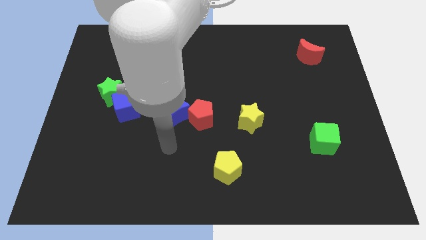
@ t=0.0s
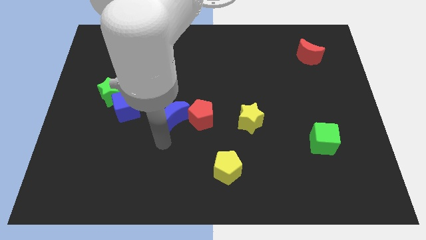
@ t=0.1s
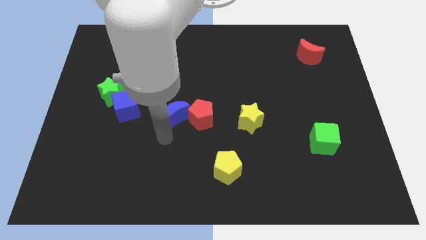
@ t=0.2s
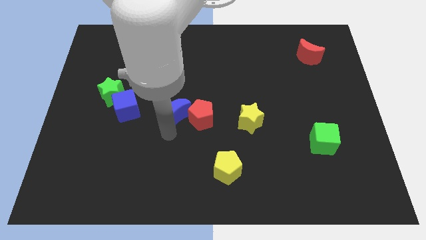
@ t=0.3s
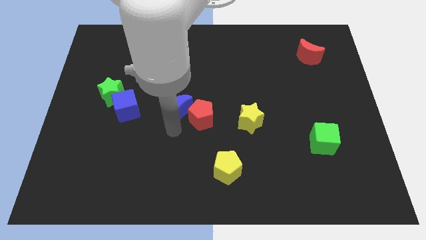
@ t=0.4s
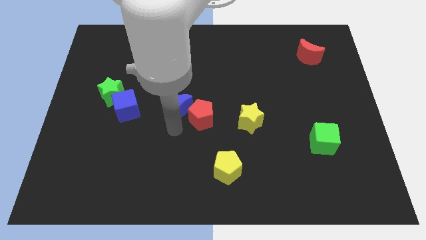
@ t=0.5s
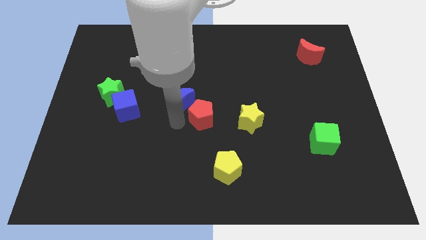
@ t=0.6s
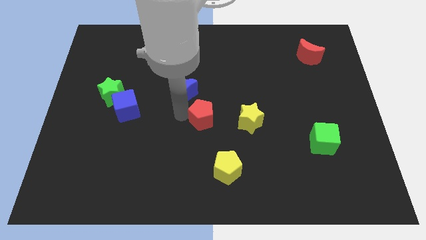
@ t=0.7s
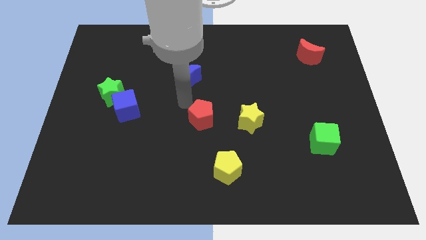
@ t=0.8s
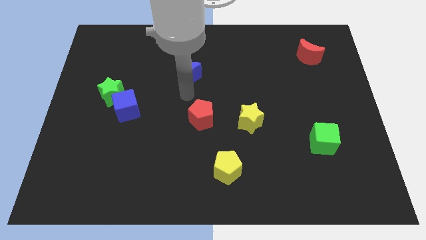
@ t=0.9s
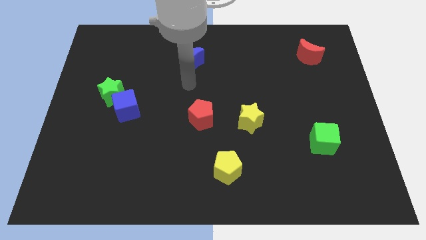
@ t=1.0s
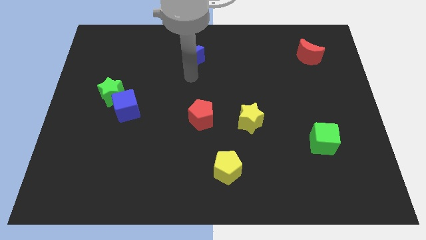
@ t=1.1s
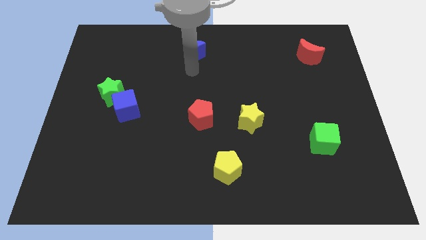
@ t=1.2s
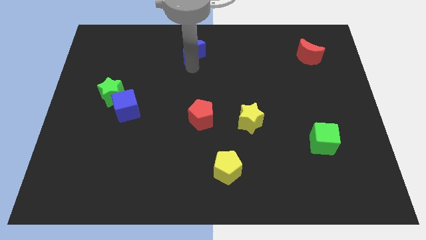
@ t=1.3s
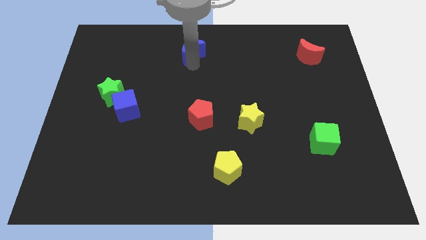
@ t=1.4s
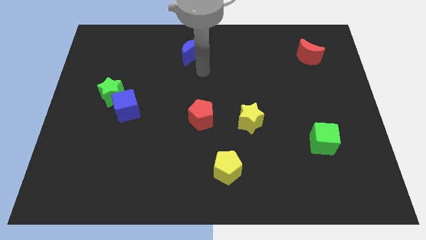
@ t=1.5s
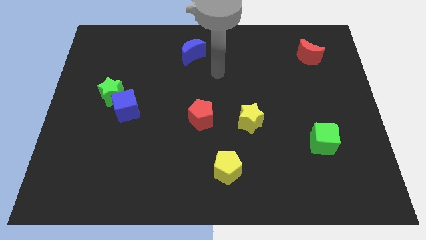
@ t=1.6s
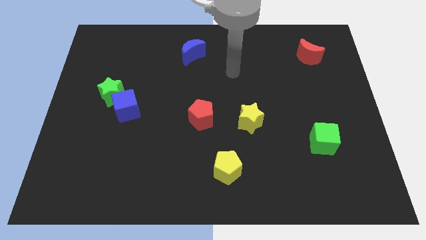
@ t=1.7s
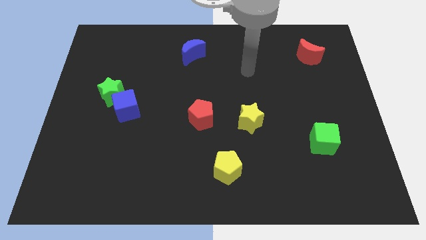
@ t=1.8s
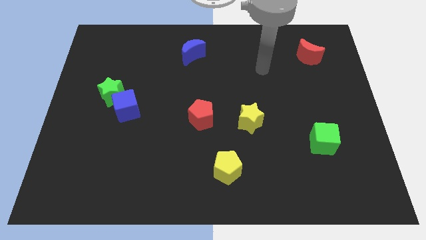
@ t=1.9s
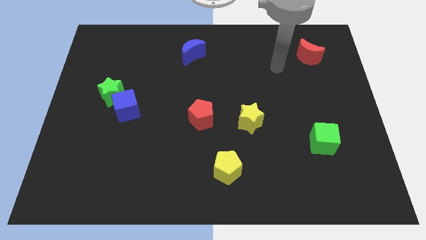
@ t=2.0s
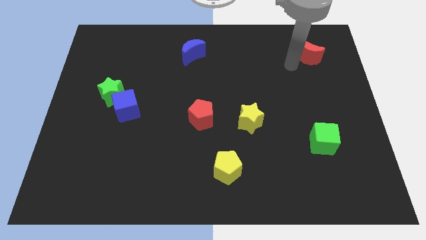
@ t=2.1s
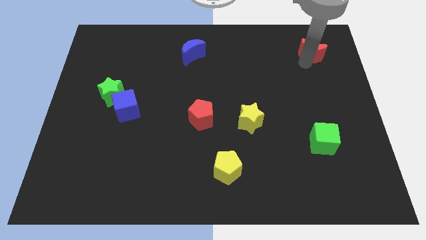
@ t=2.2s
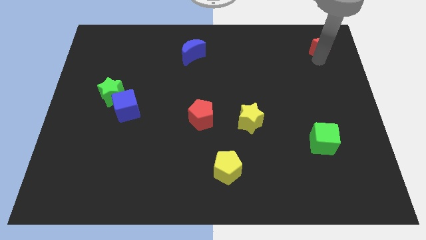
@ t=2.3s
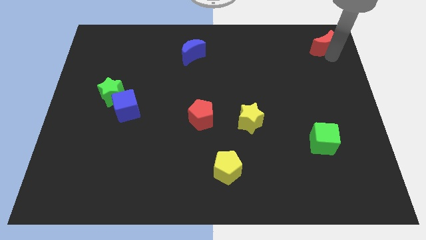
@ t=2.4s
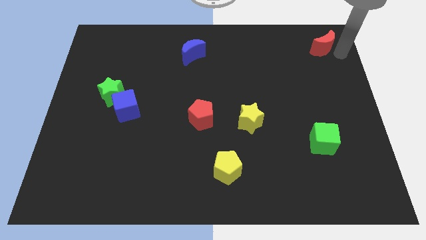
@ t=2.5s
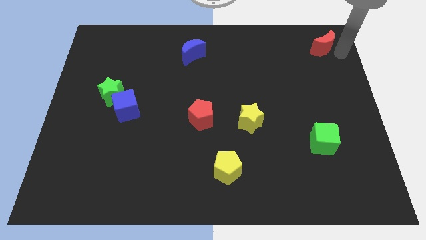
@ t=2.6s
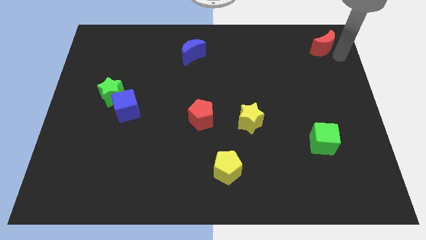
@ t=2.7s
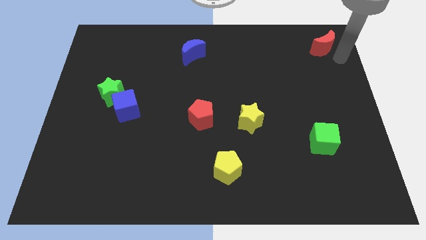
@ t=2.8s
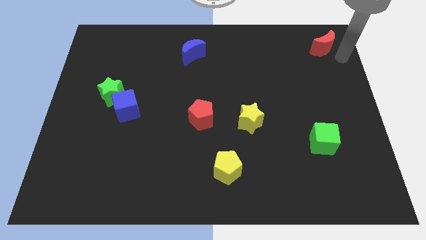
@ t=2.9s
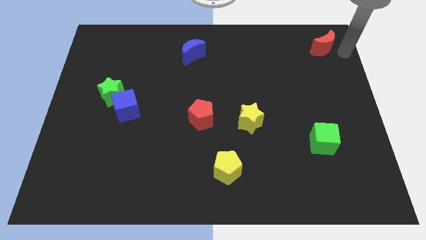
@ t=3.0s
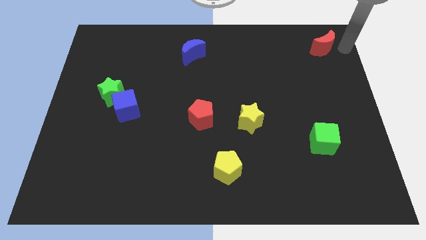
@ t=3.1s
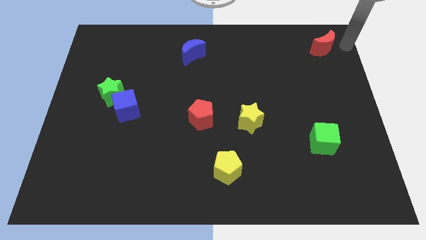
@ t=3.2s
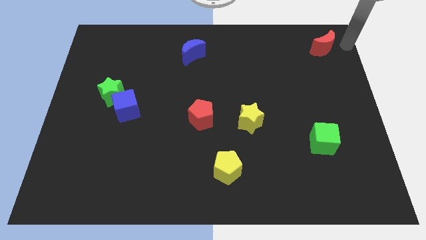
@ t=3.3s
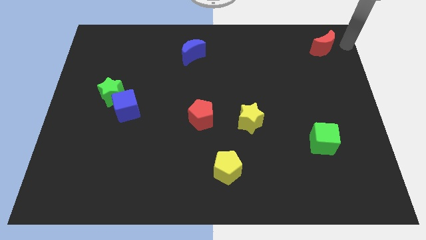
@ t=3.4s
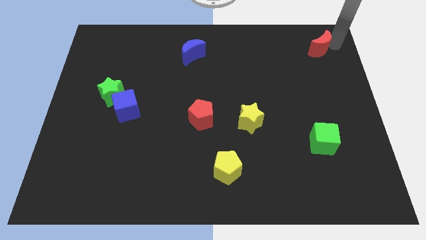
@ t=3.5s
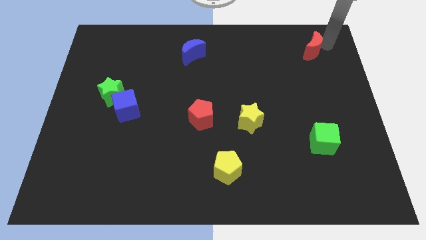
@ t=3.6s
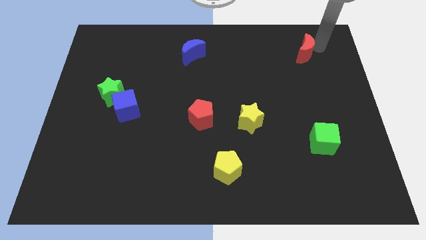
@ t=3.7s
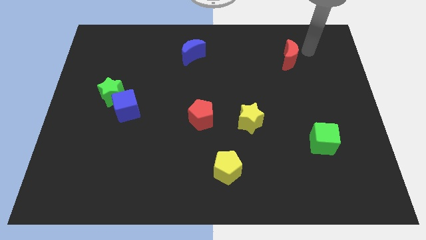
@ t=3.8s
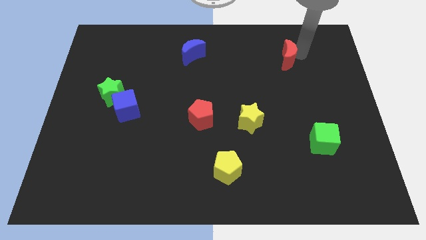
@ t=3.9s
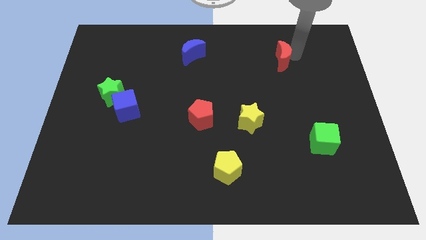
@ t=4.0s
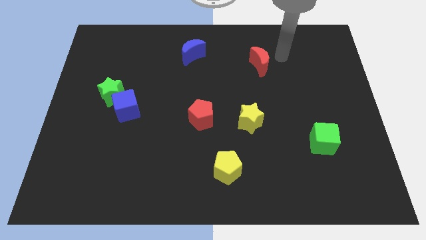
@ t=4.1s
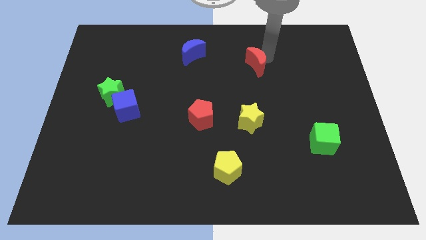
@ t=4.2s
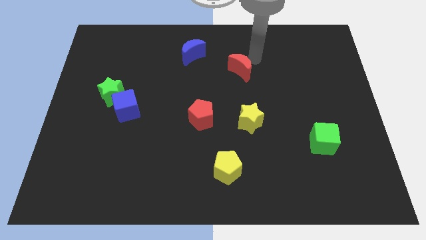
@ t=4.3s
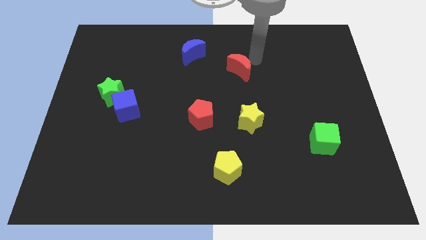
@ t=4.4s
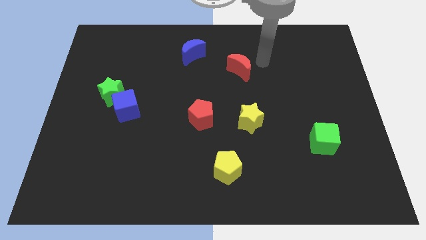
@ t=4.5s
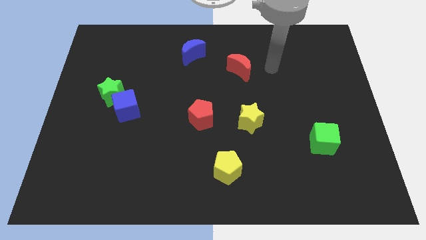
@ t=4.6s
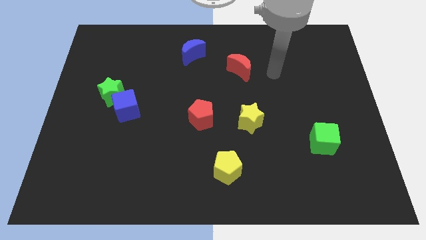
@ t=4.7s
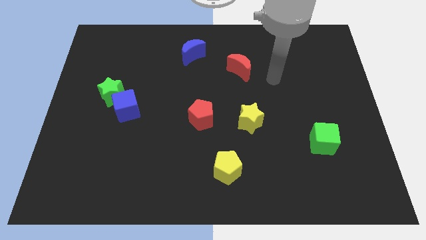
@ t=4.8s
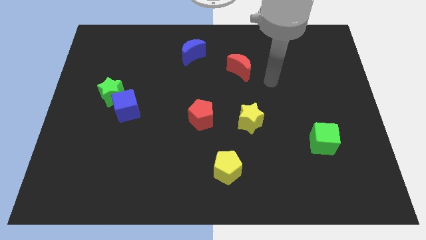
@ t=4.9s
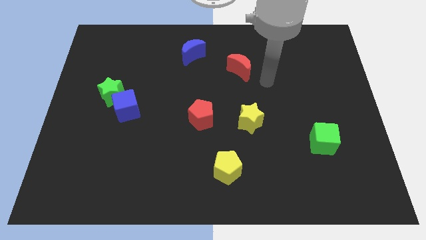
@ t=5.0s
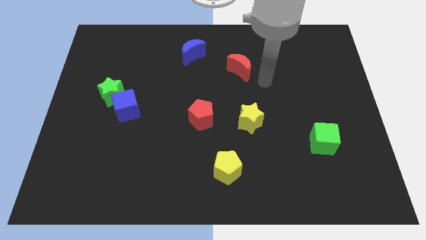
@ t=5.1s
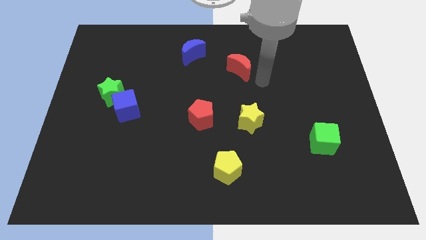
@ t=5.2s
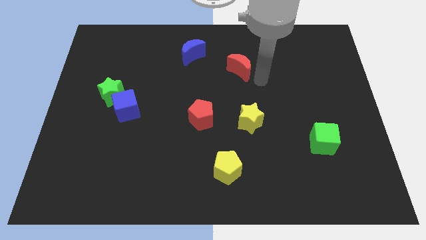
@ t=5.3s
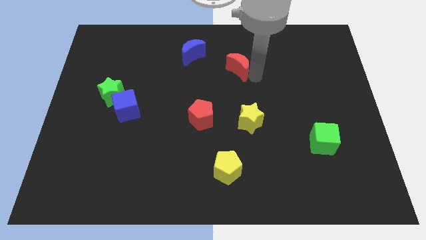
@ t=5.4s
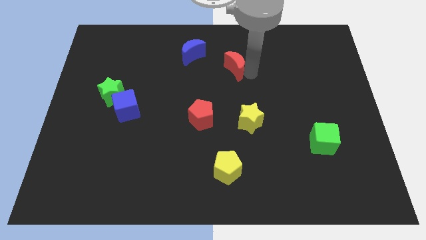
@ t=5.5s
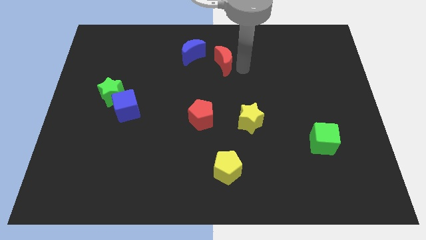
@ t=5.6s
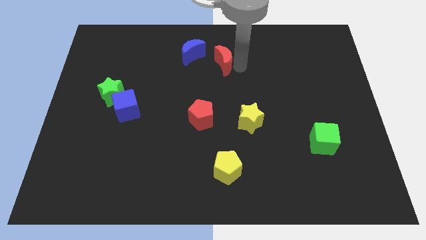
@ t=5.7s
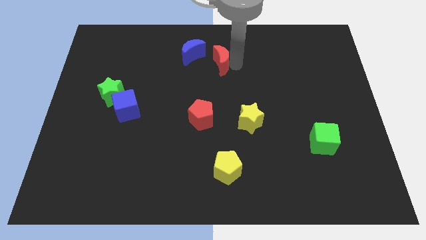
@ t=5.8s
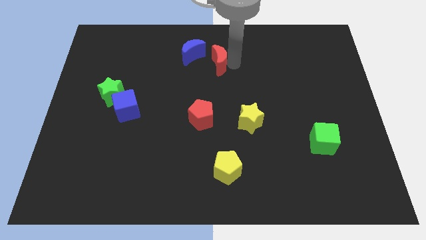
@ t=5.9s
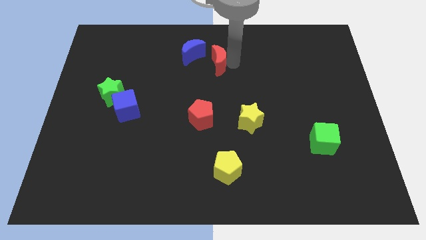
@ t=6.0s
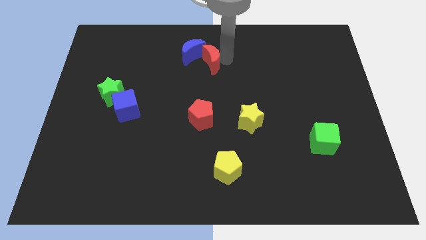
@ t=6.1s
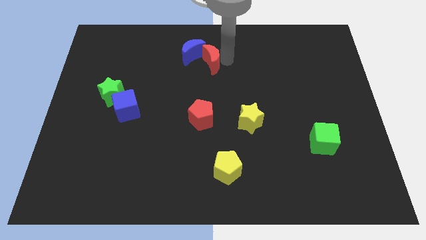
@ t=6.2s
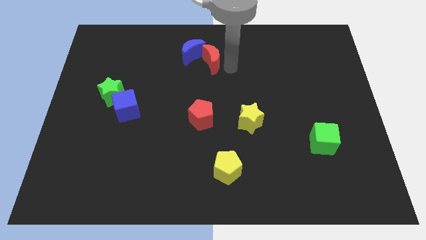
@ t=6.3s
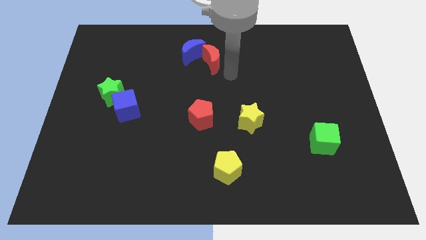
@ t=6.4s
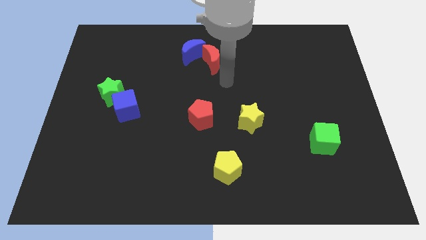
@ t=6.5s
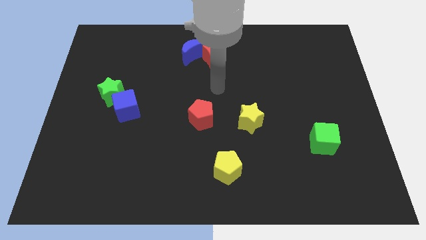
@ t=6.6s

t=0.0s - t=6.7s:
move red moon close to the blue moon

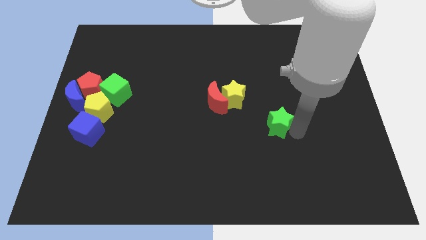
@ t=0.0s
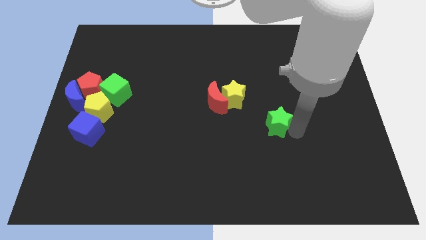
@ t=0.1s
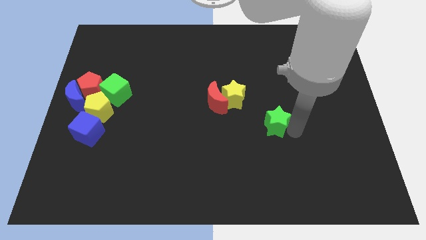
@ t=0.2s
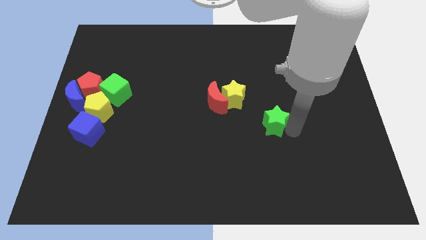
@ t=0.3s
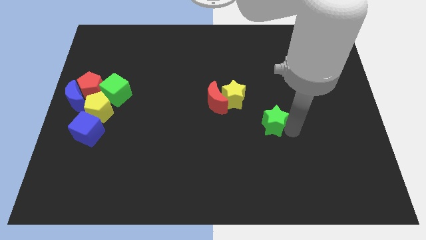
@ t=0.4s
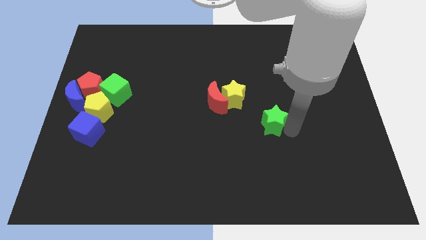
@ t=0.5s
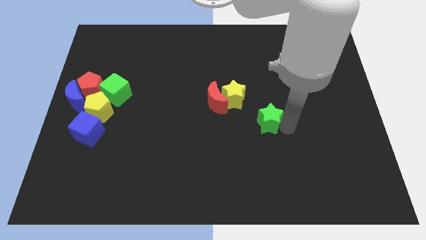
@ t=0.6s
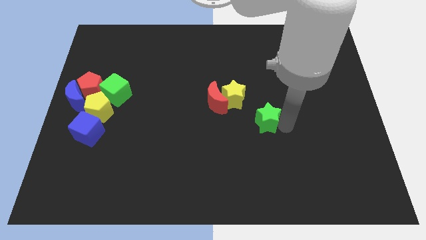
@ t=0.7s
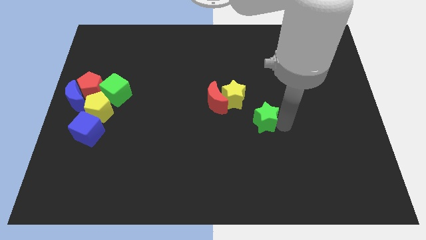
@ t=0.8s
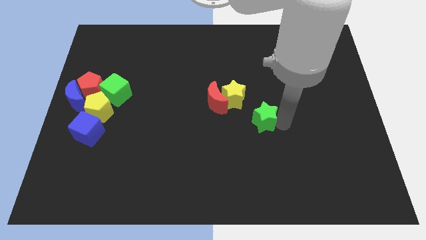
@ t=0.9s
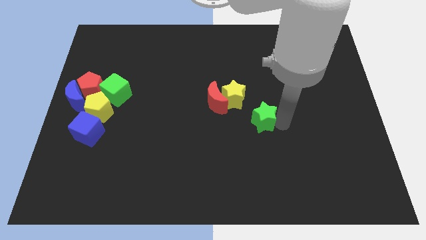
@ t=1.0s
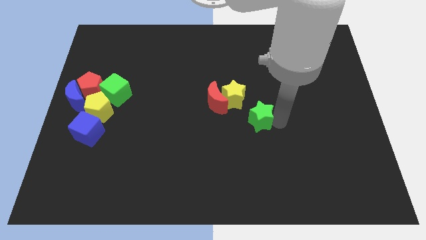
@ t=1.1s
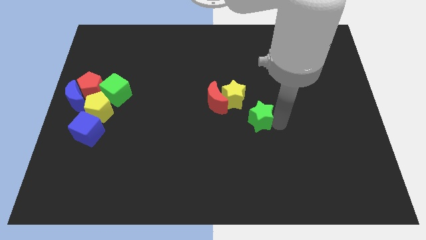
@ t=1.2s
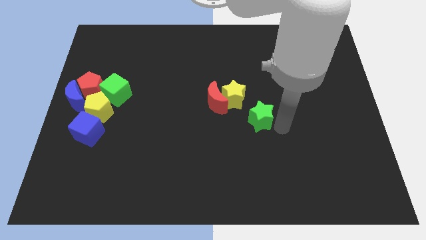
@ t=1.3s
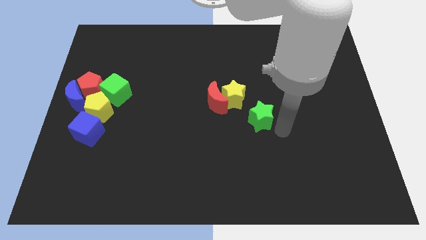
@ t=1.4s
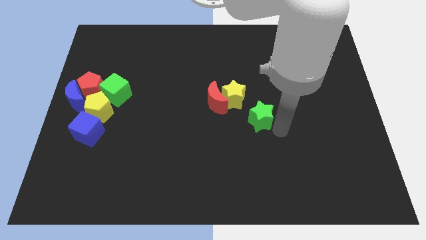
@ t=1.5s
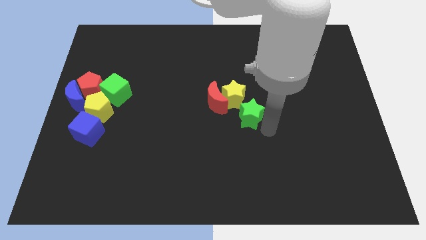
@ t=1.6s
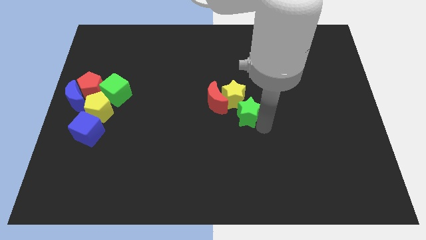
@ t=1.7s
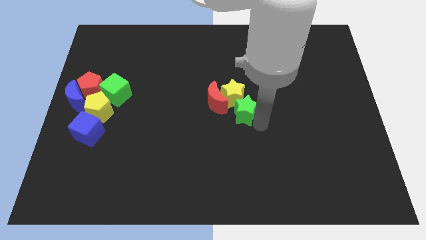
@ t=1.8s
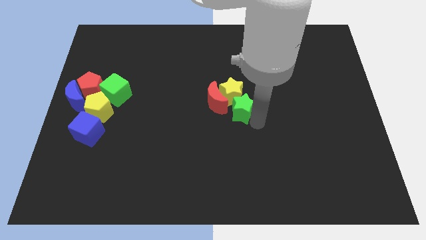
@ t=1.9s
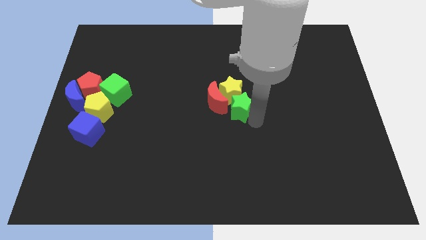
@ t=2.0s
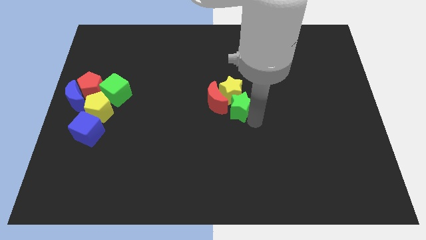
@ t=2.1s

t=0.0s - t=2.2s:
push the green star into the yellow star
